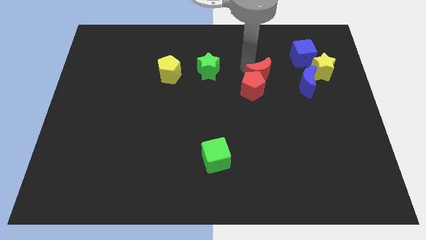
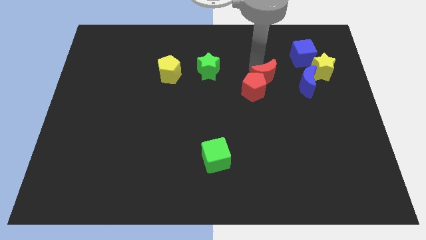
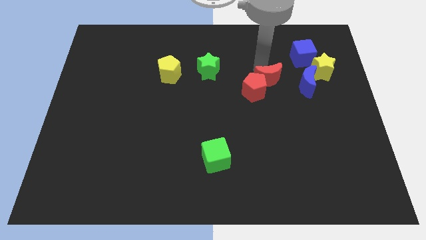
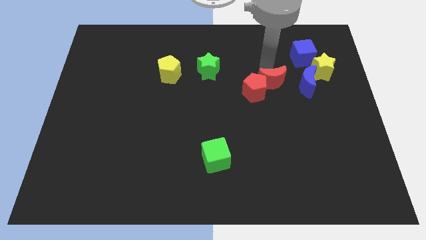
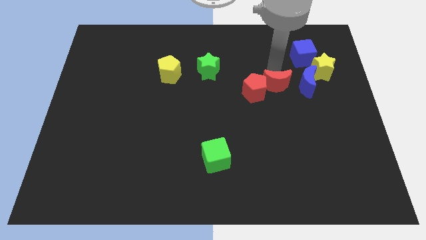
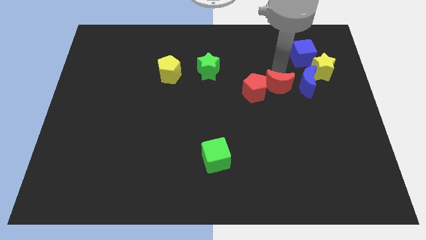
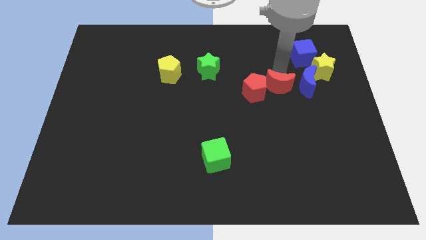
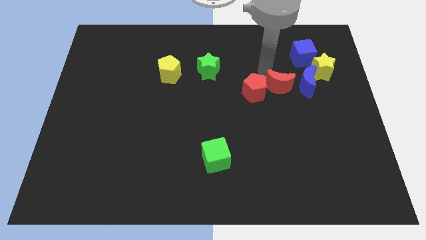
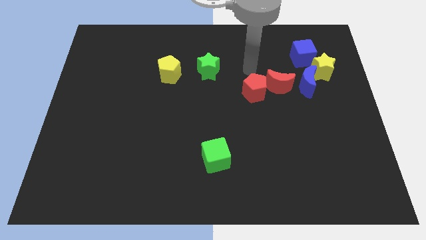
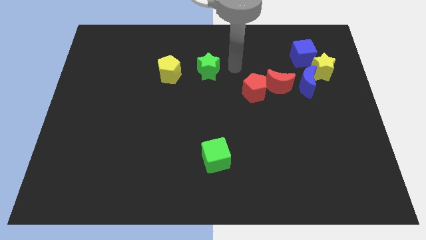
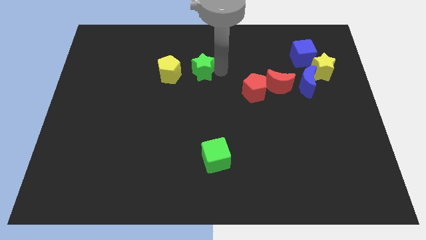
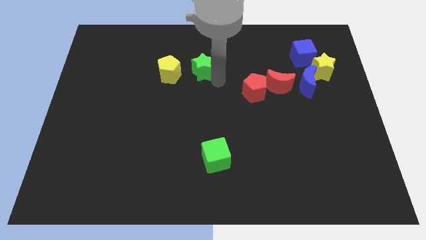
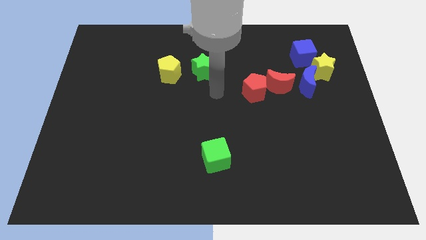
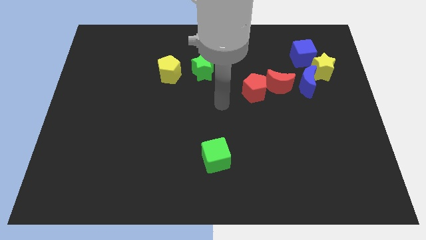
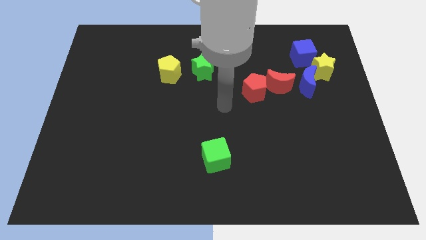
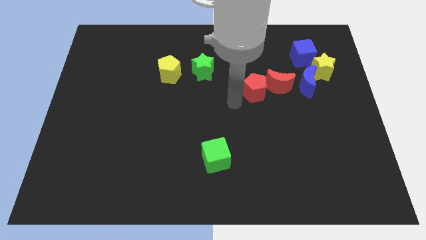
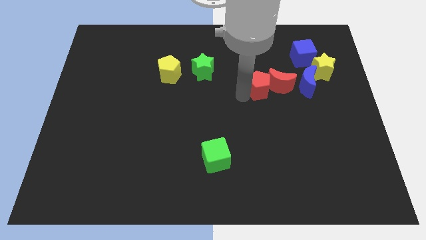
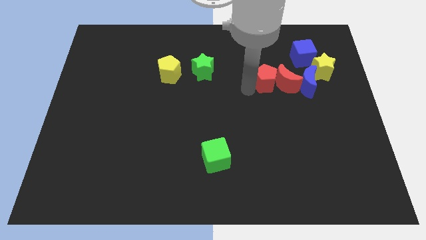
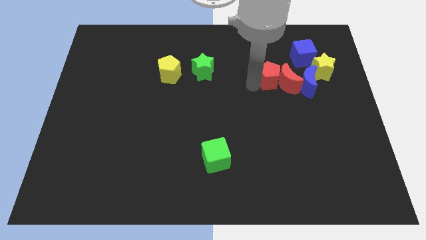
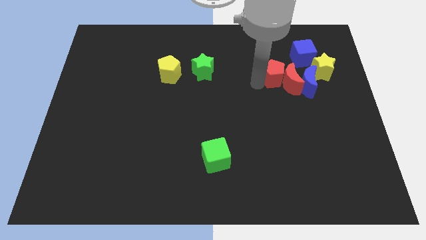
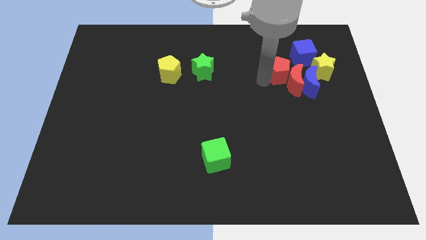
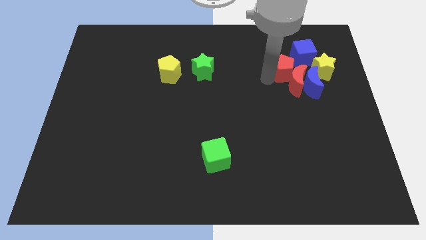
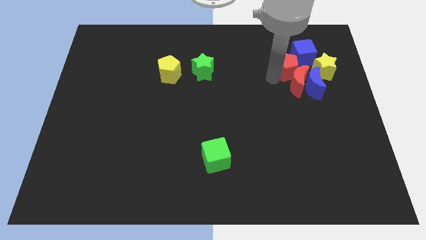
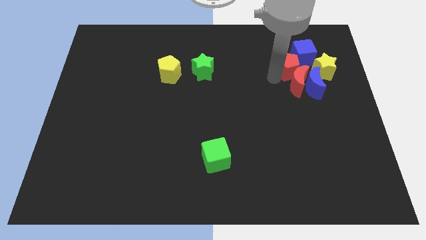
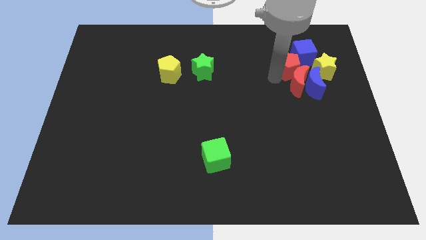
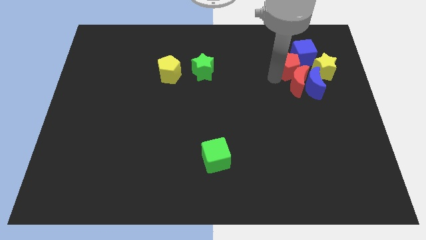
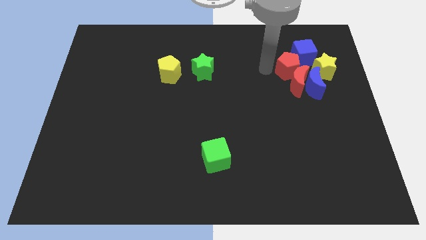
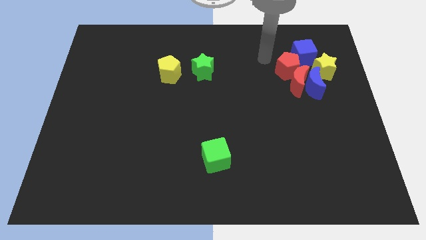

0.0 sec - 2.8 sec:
push red pentagon towards blue cube

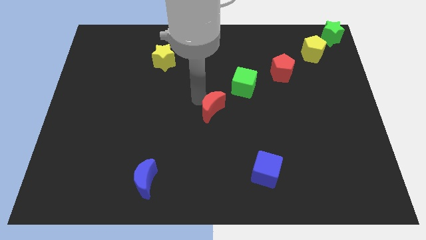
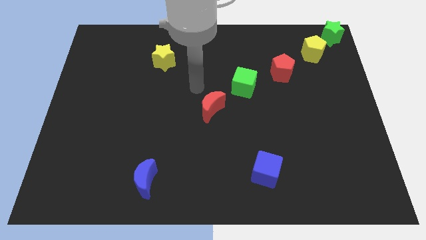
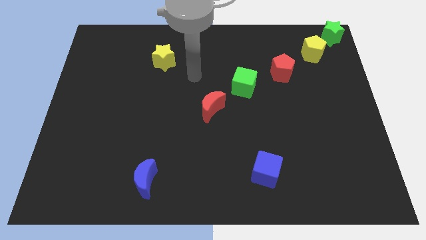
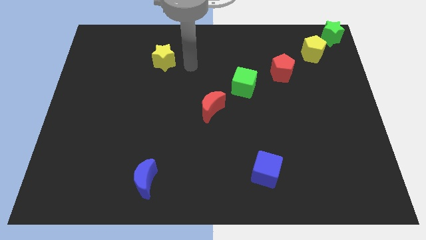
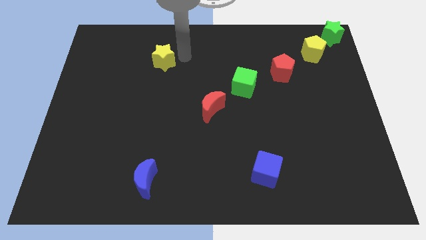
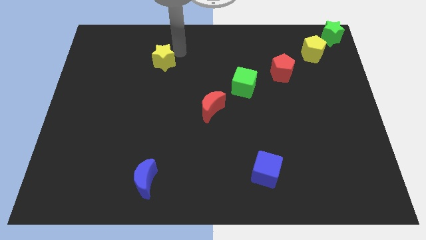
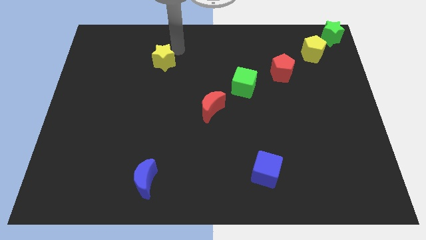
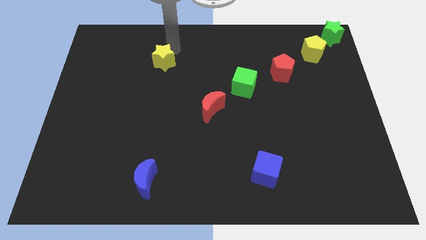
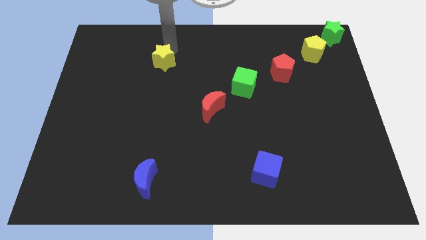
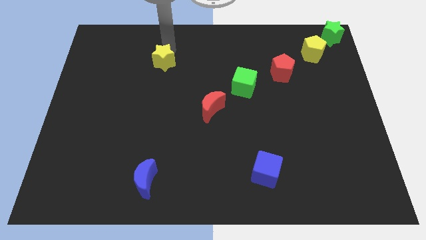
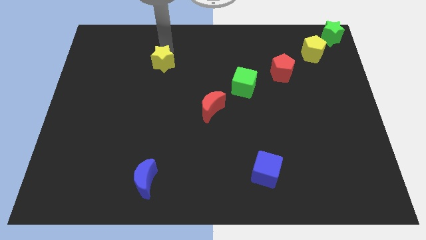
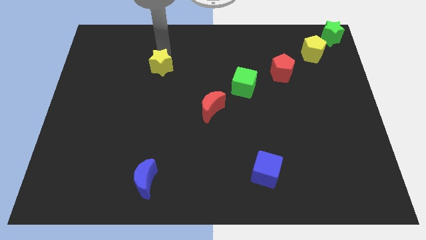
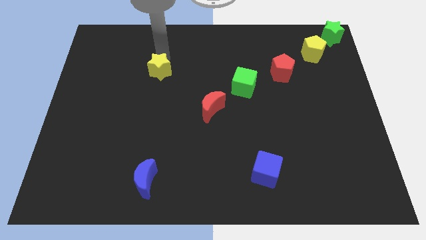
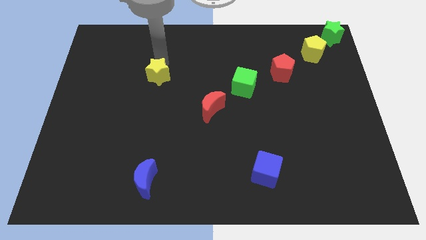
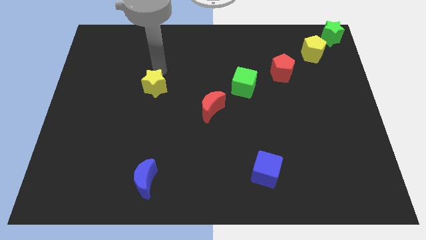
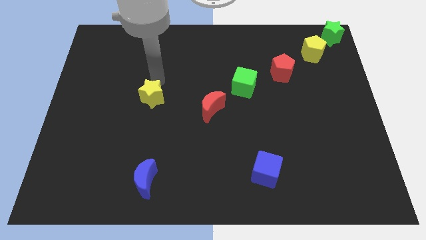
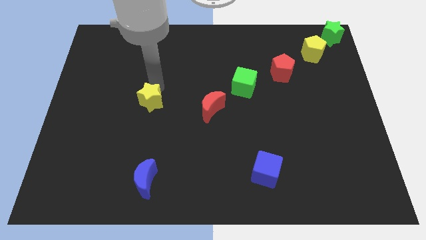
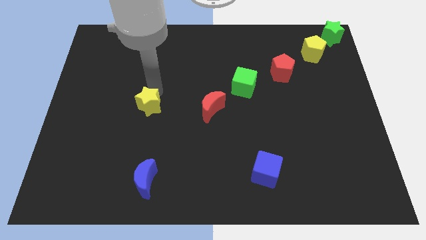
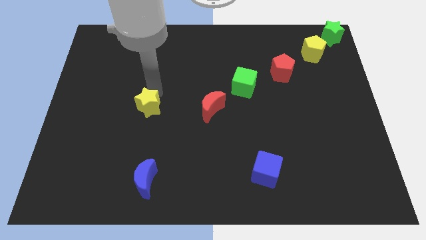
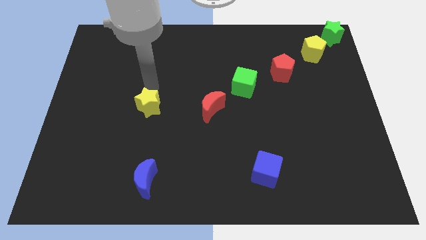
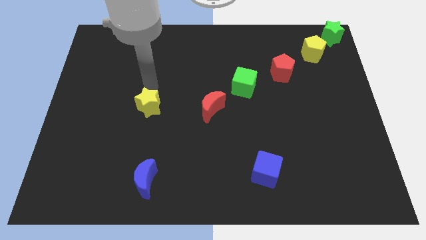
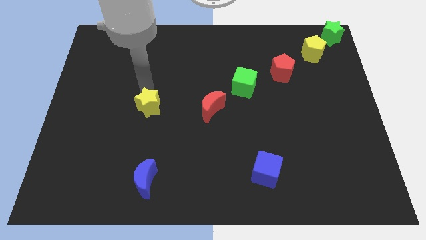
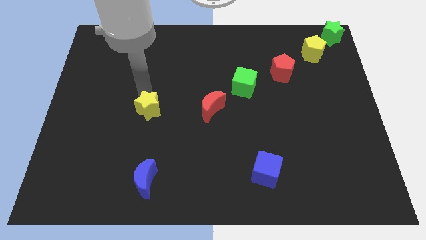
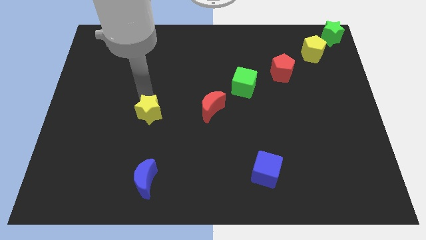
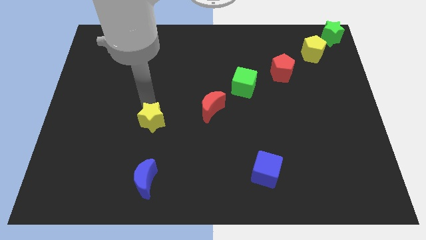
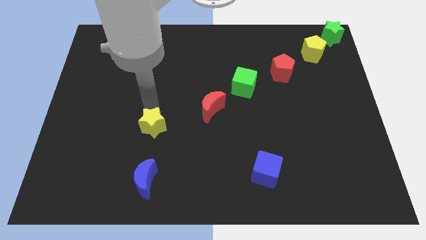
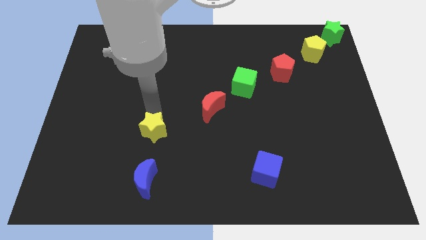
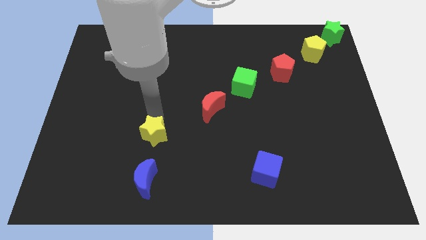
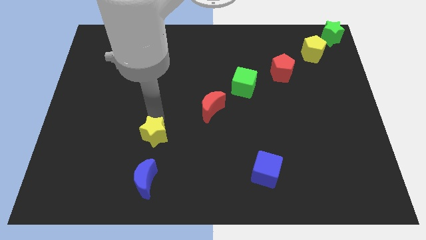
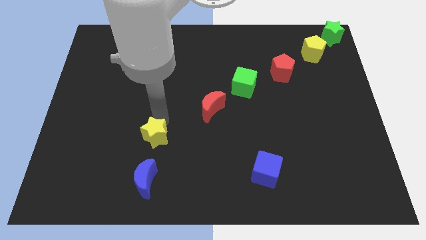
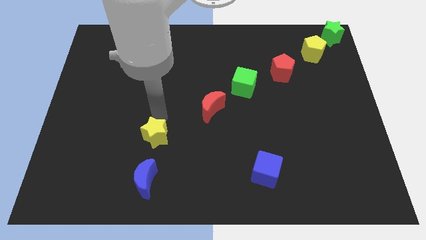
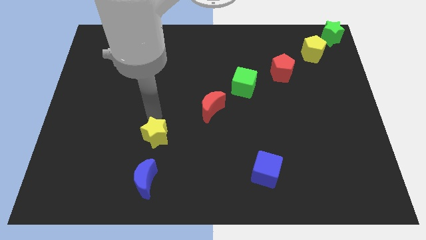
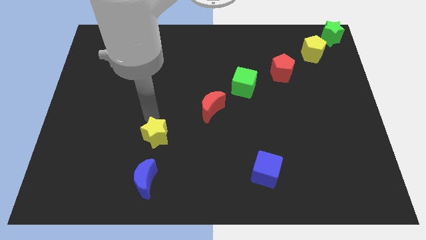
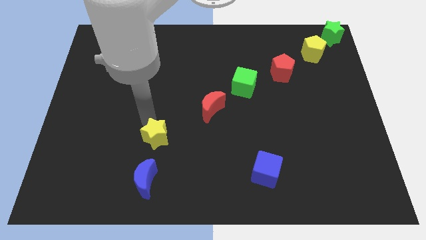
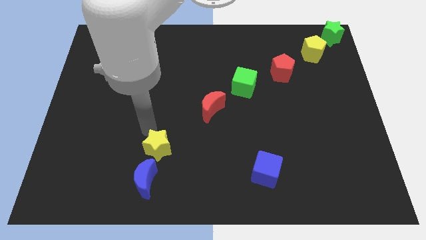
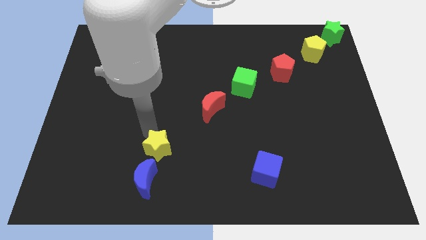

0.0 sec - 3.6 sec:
place the yellow star to the top of the blue moon

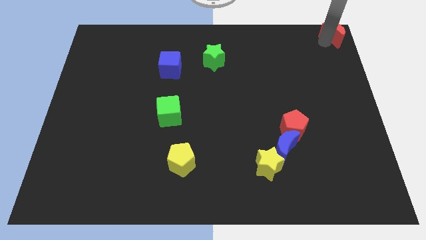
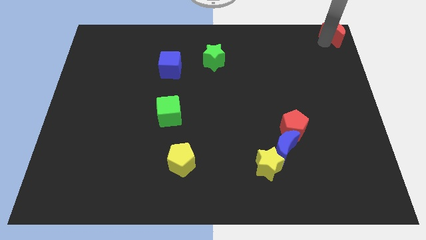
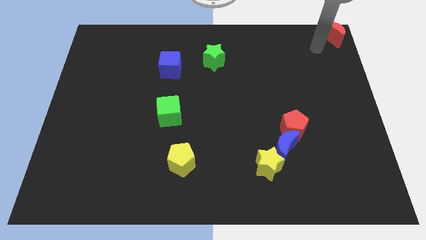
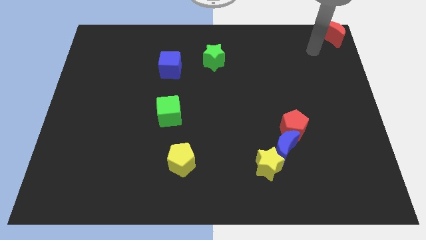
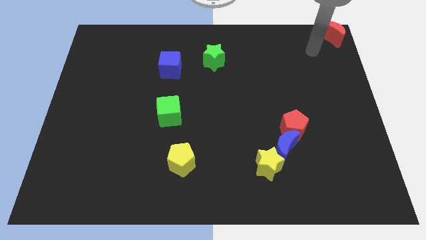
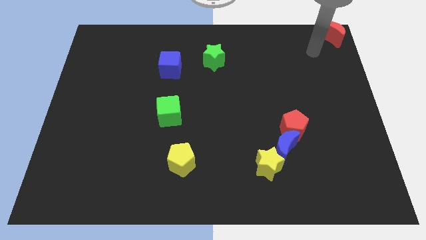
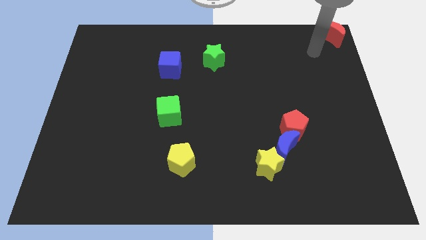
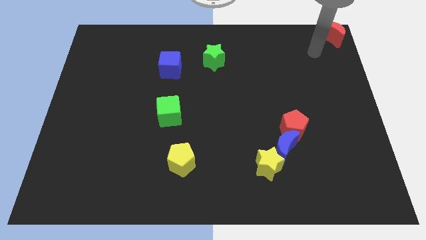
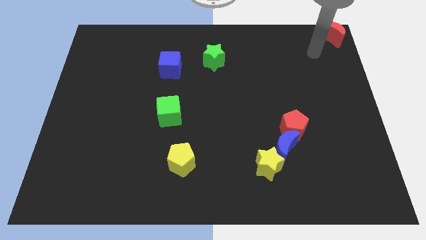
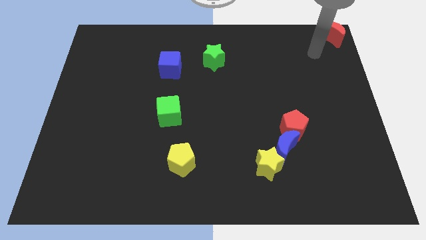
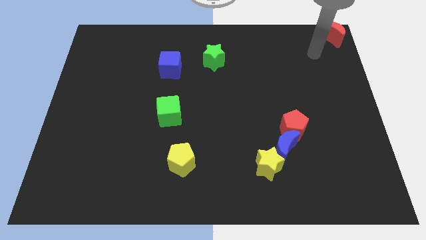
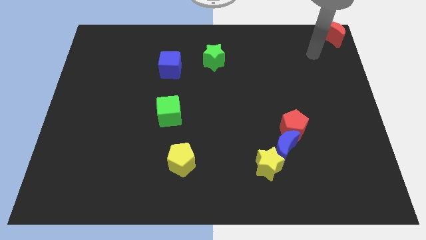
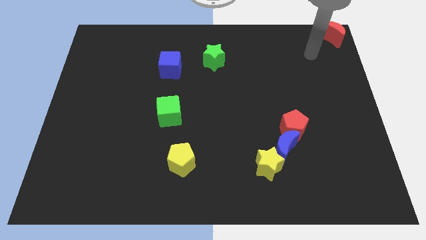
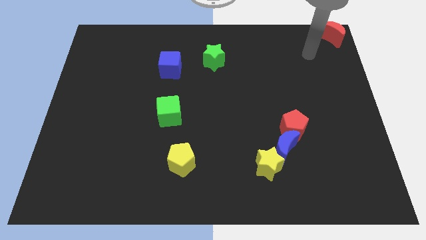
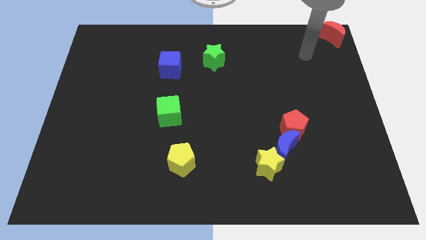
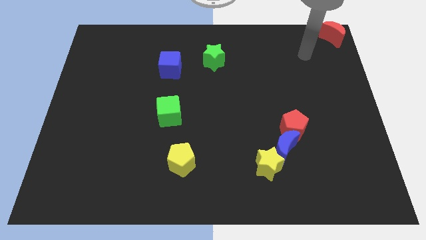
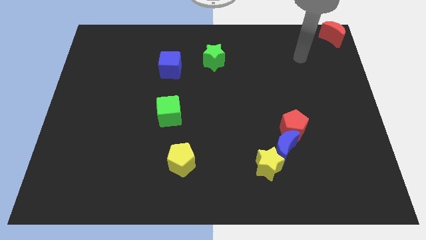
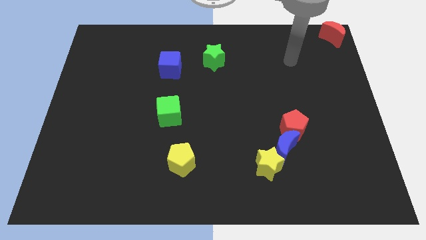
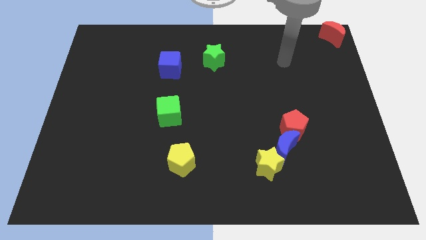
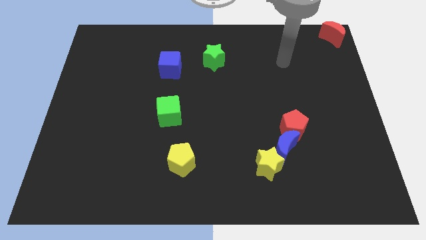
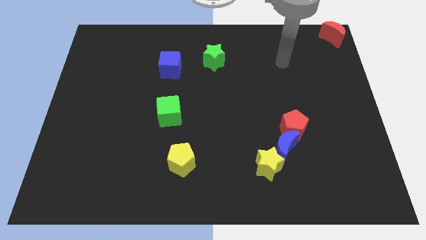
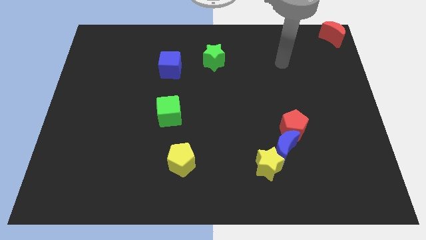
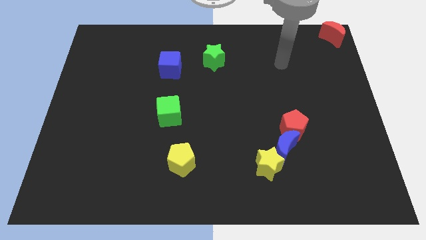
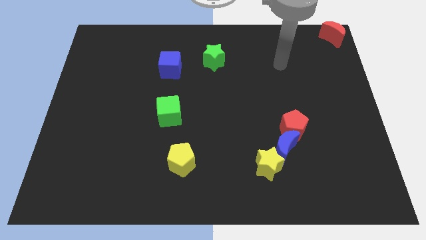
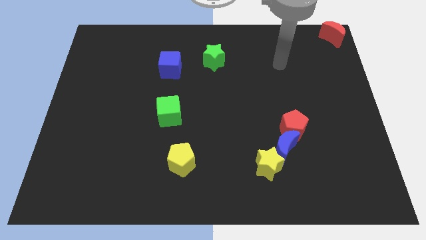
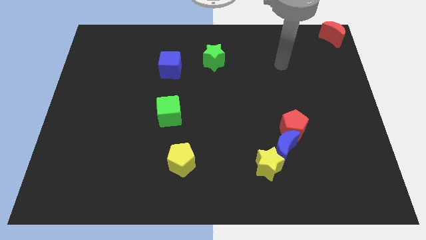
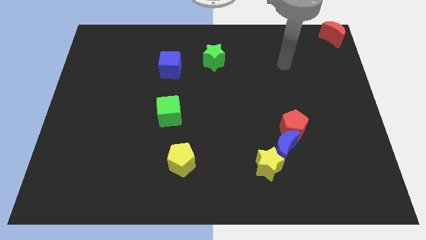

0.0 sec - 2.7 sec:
move your arm to the horizontal right side of the green star
